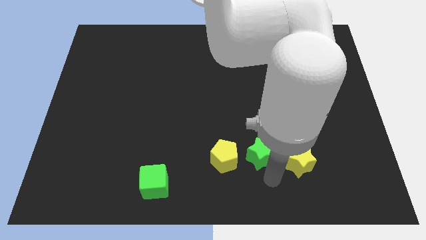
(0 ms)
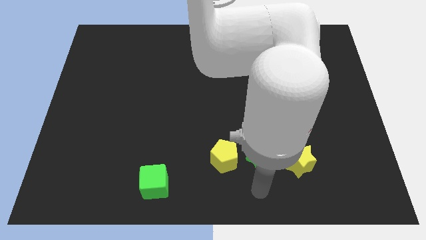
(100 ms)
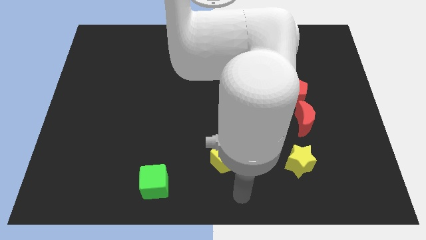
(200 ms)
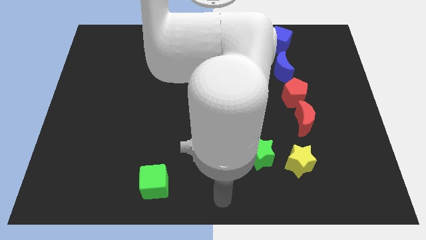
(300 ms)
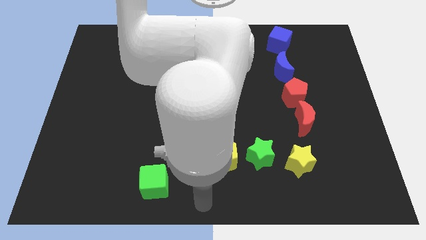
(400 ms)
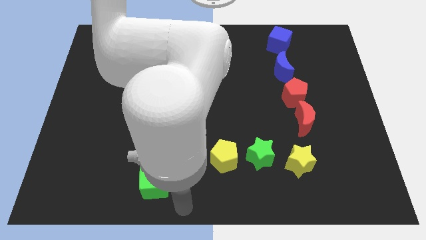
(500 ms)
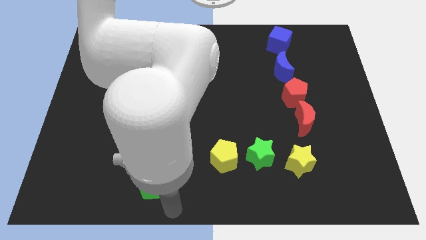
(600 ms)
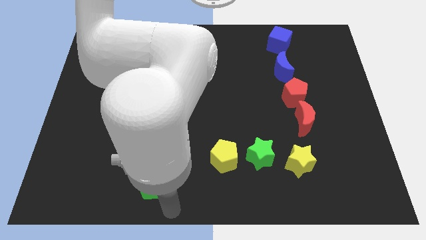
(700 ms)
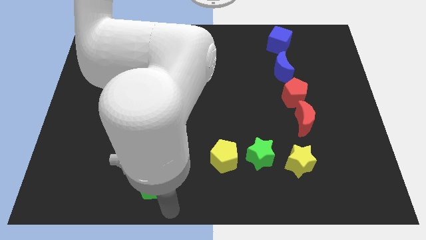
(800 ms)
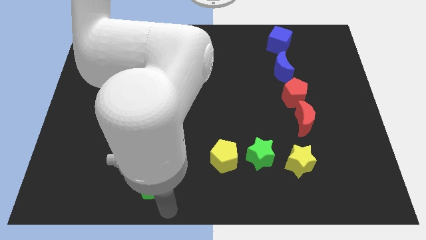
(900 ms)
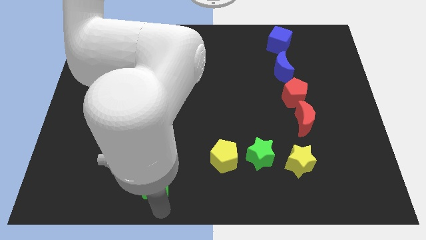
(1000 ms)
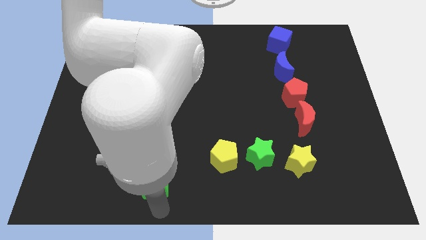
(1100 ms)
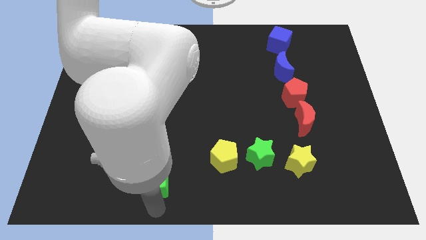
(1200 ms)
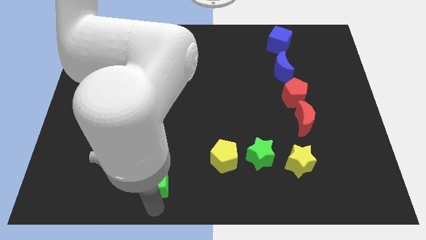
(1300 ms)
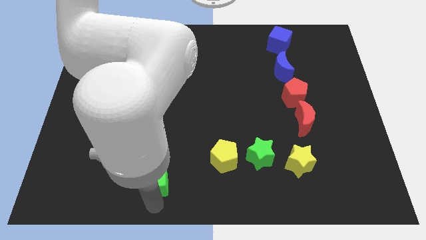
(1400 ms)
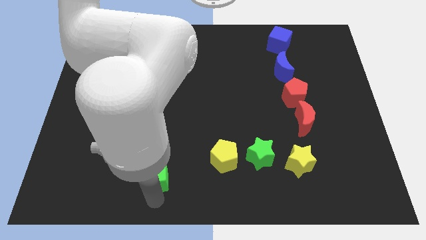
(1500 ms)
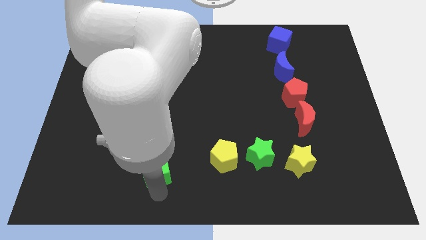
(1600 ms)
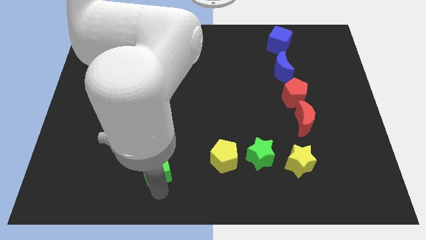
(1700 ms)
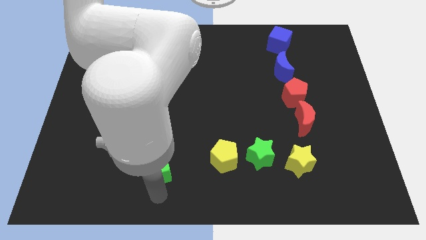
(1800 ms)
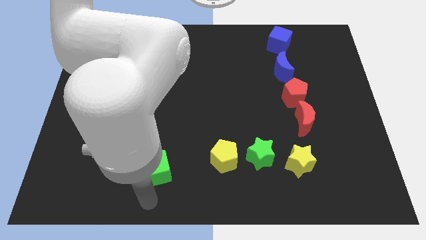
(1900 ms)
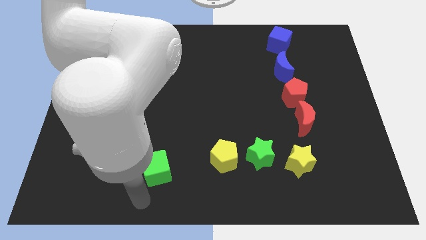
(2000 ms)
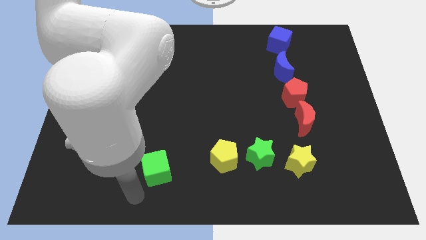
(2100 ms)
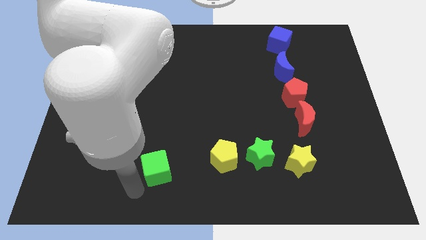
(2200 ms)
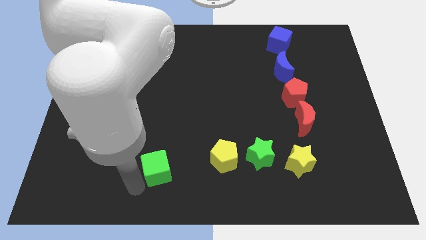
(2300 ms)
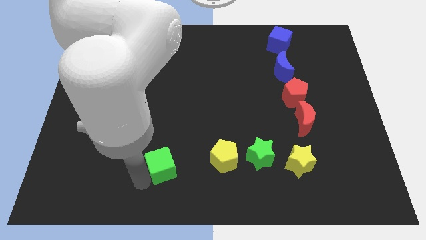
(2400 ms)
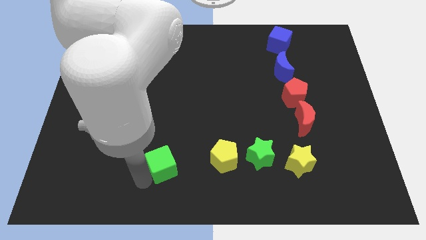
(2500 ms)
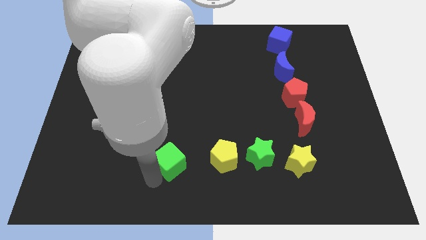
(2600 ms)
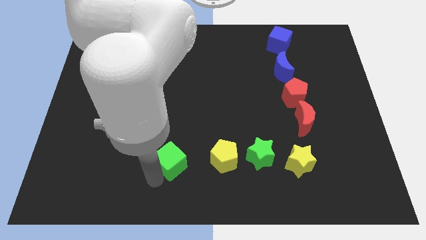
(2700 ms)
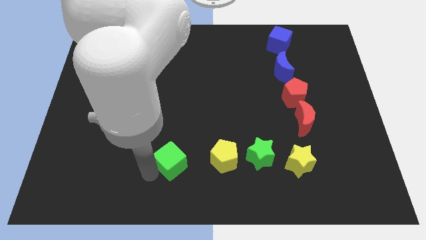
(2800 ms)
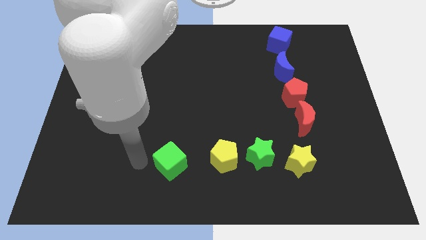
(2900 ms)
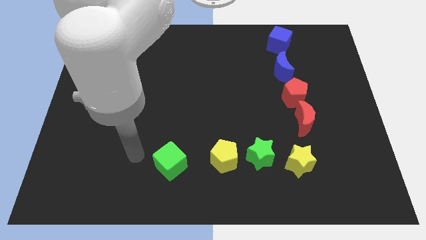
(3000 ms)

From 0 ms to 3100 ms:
put the green cube at the left side of the yellow pentagon

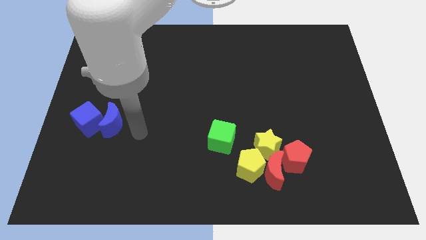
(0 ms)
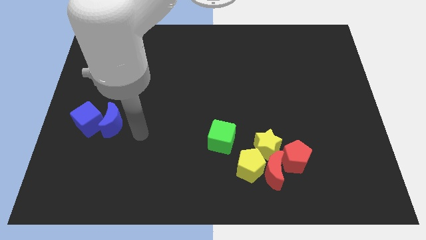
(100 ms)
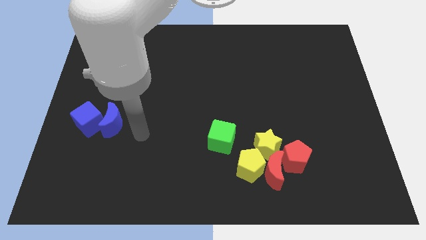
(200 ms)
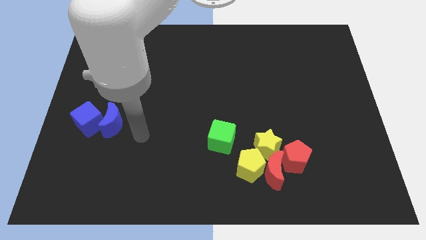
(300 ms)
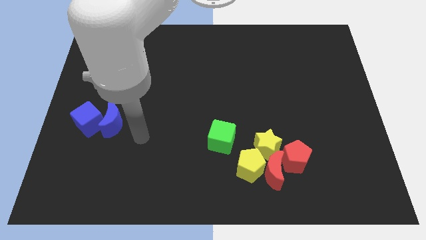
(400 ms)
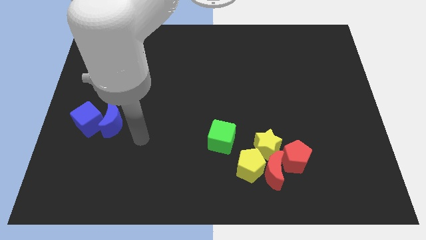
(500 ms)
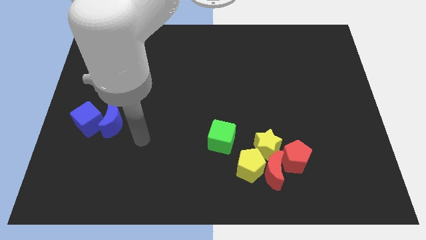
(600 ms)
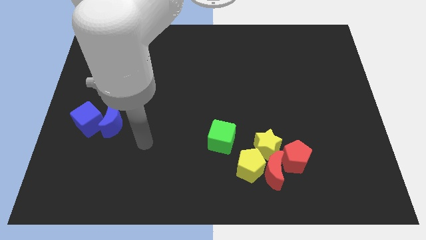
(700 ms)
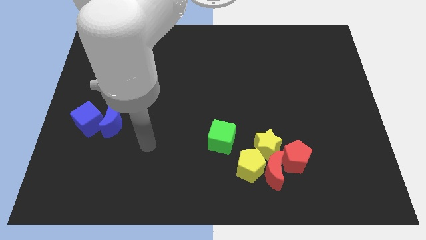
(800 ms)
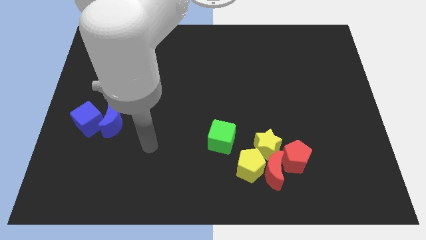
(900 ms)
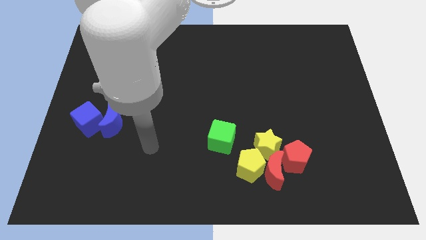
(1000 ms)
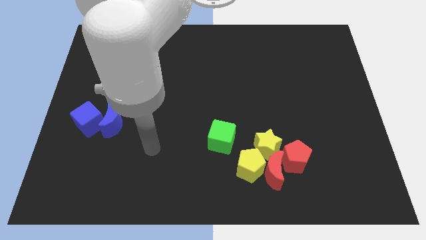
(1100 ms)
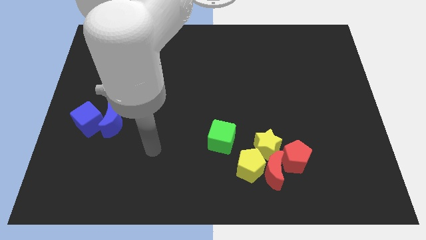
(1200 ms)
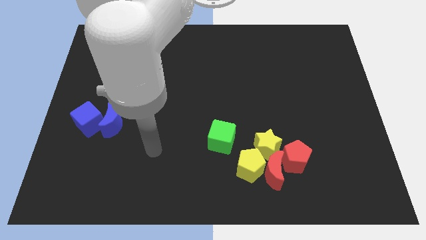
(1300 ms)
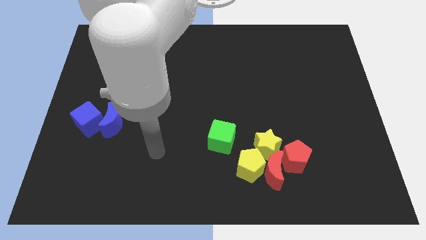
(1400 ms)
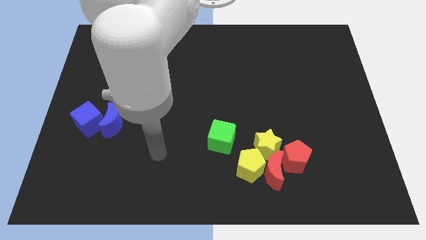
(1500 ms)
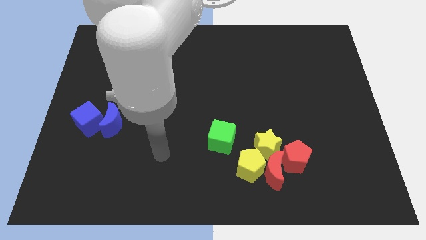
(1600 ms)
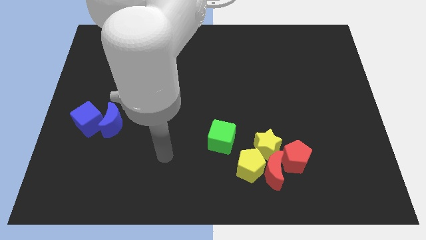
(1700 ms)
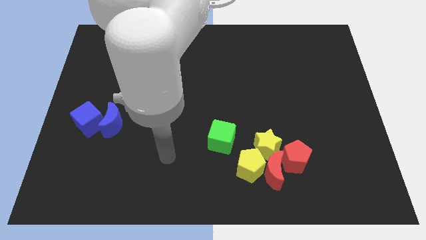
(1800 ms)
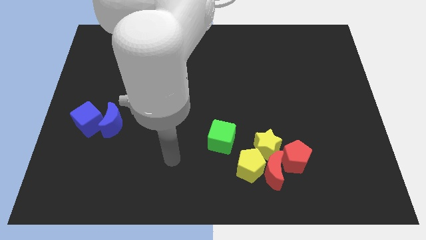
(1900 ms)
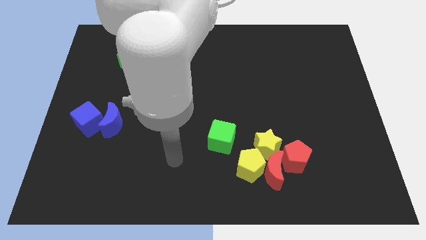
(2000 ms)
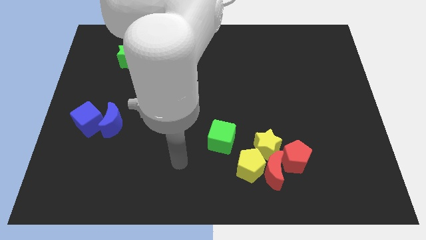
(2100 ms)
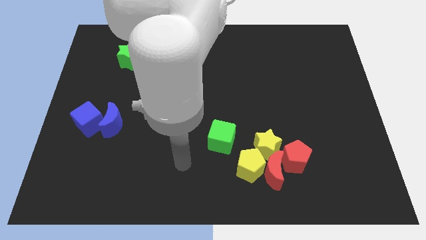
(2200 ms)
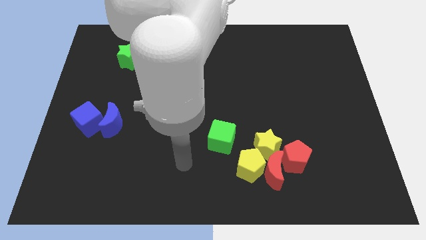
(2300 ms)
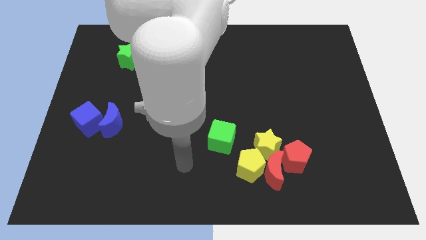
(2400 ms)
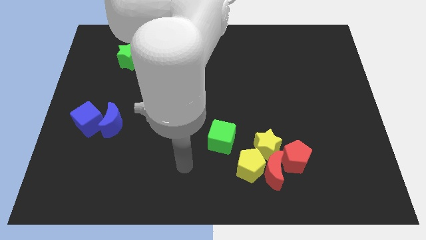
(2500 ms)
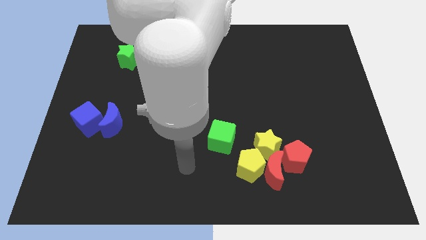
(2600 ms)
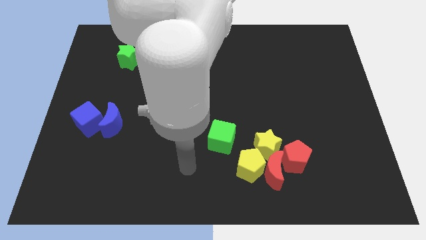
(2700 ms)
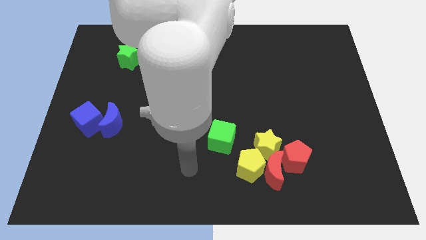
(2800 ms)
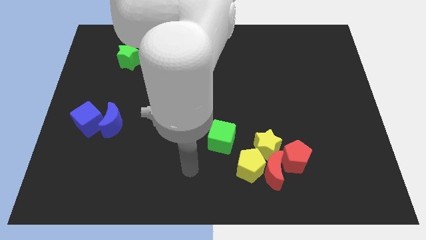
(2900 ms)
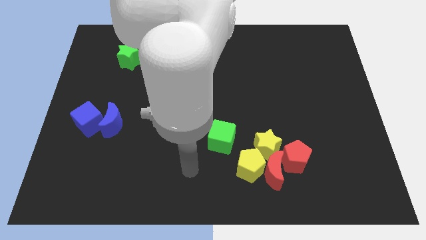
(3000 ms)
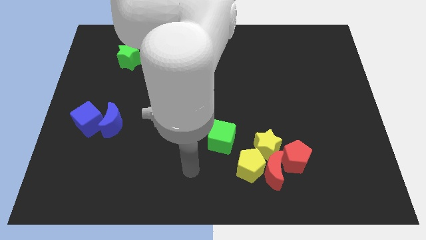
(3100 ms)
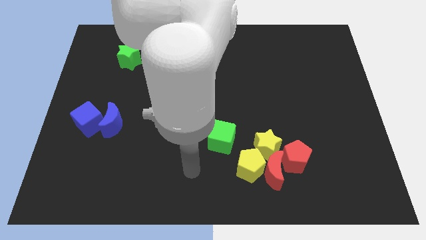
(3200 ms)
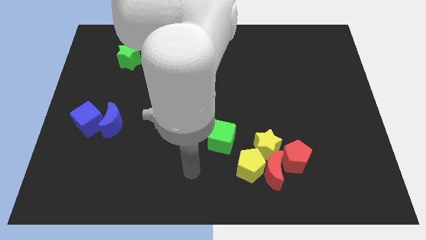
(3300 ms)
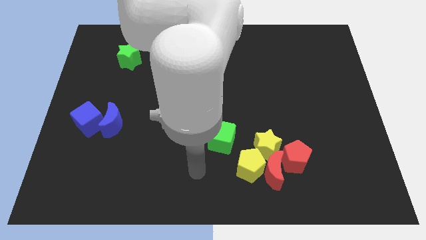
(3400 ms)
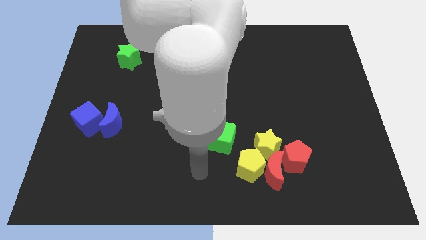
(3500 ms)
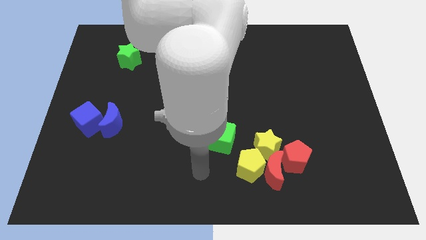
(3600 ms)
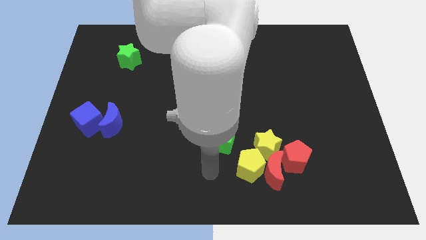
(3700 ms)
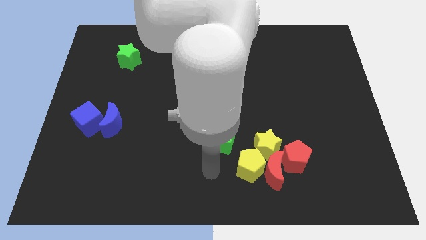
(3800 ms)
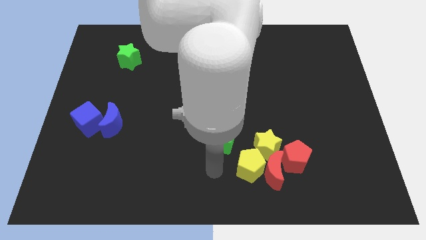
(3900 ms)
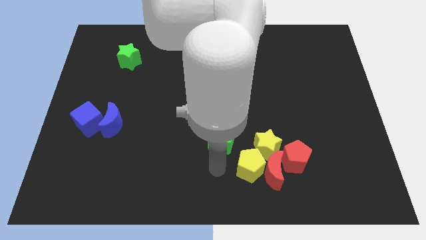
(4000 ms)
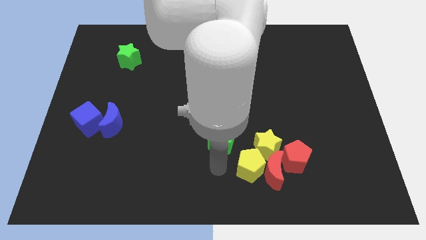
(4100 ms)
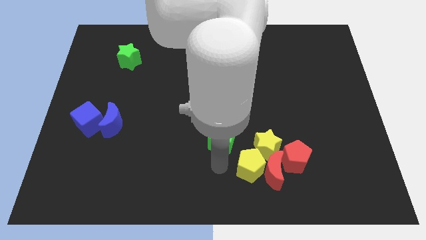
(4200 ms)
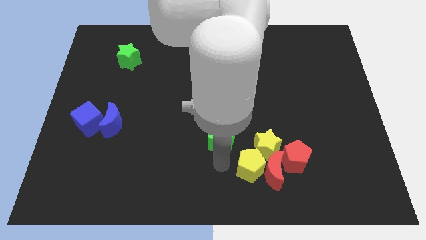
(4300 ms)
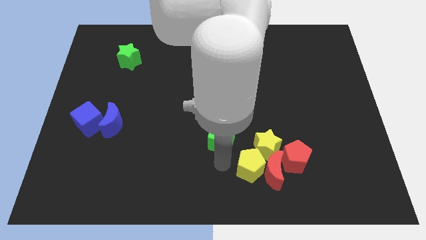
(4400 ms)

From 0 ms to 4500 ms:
point the arm at the bottom of the green cube

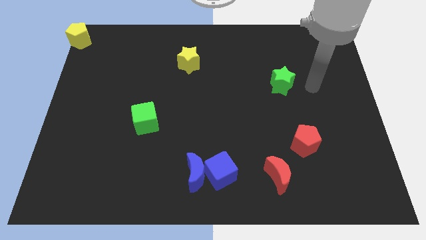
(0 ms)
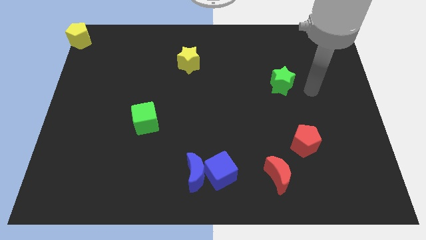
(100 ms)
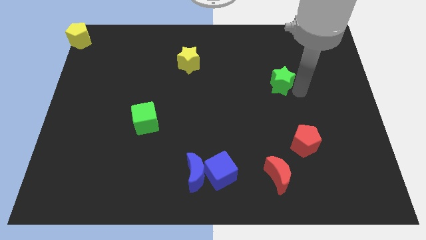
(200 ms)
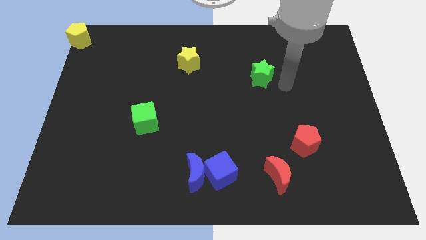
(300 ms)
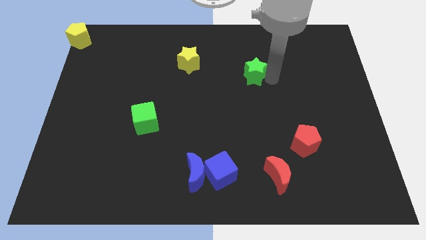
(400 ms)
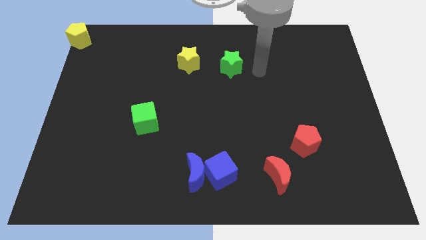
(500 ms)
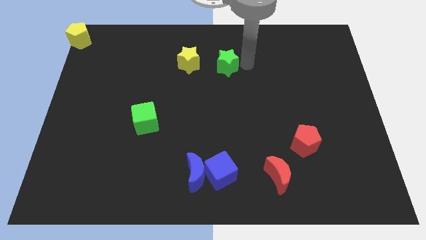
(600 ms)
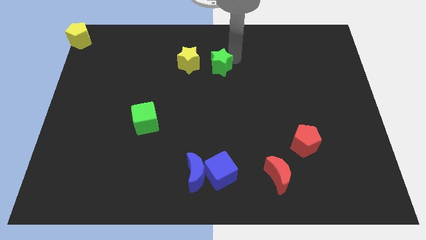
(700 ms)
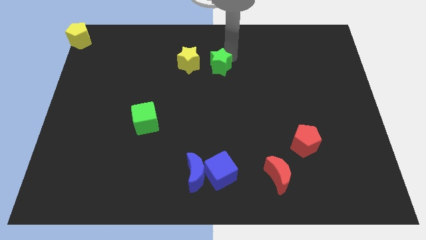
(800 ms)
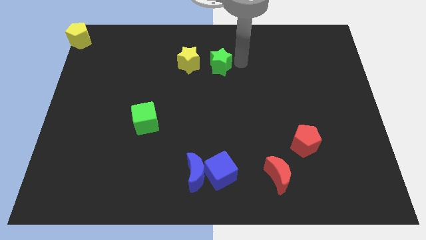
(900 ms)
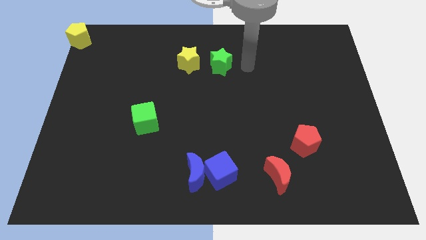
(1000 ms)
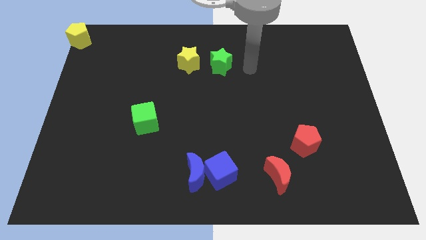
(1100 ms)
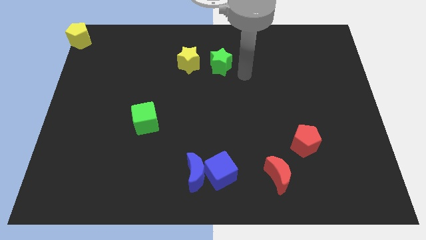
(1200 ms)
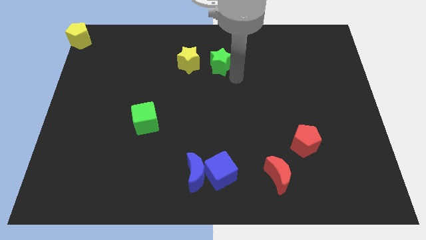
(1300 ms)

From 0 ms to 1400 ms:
push the green star slightly towards the yellow star
